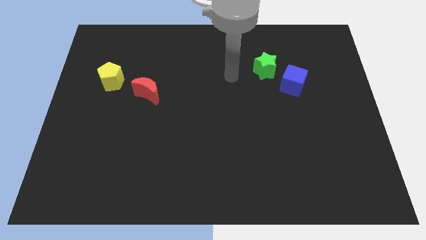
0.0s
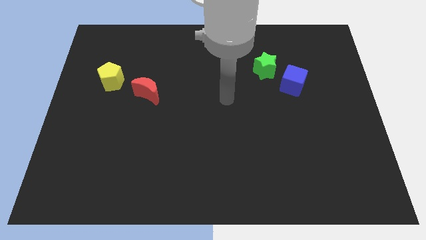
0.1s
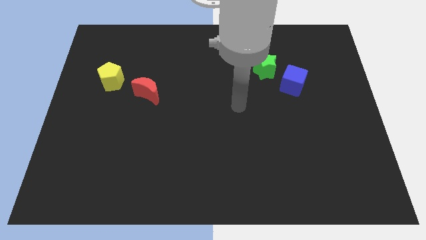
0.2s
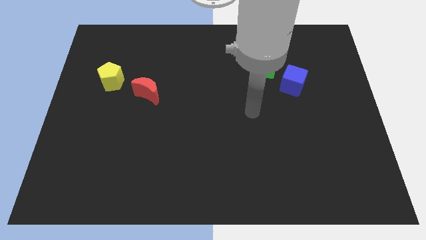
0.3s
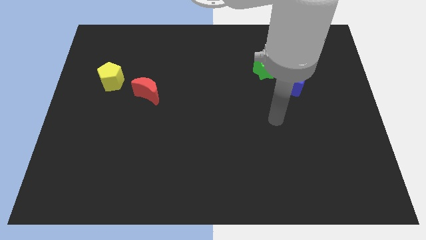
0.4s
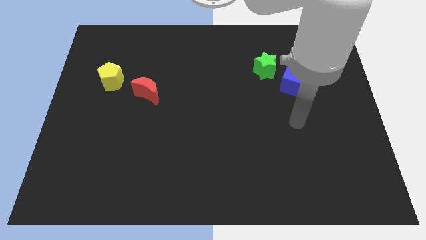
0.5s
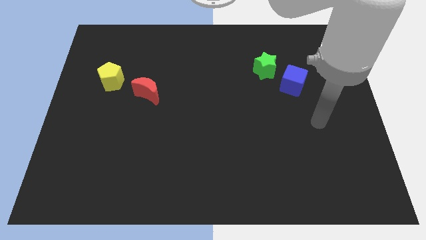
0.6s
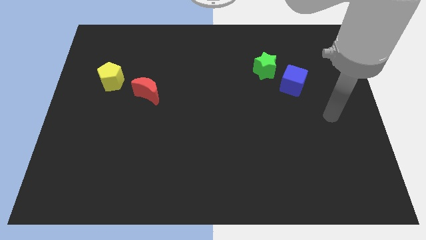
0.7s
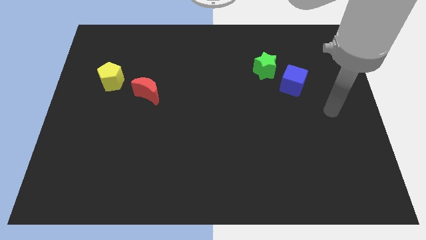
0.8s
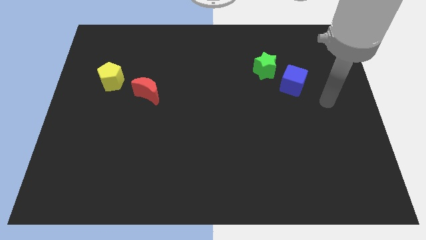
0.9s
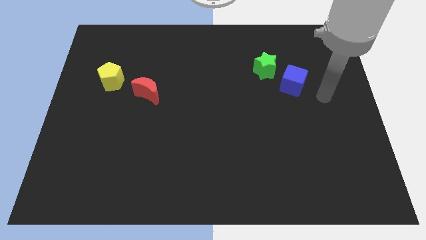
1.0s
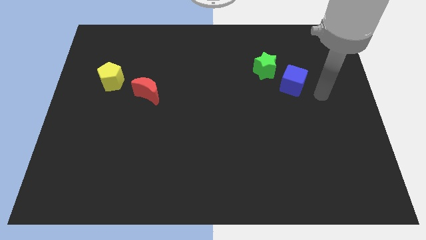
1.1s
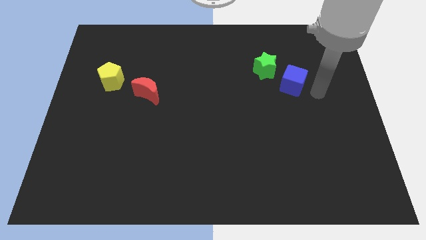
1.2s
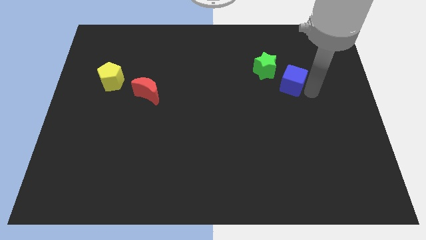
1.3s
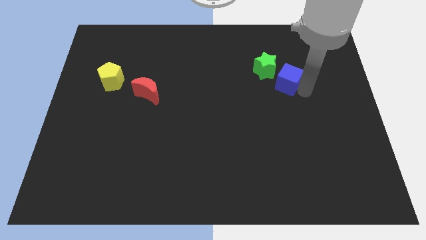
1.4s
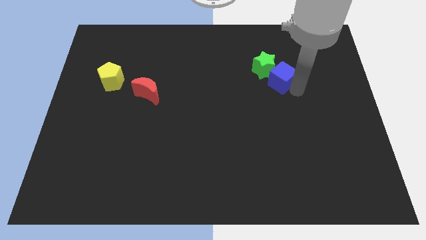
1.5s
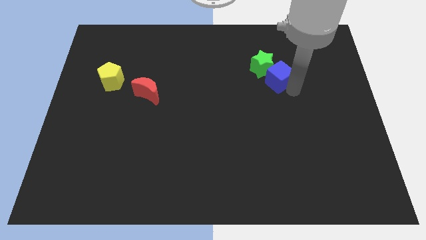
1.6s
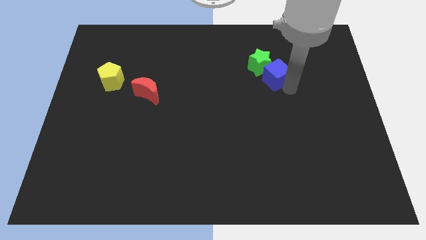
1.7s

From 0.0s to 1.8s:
move the blue block to the green block

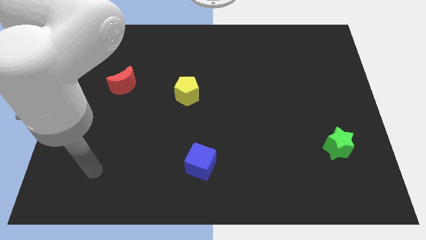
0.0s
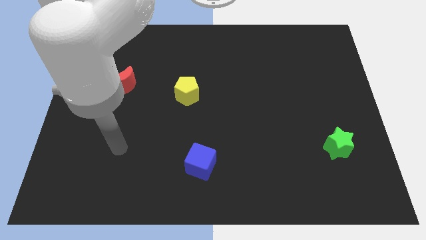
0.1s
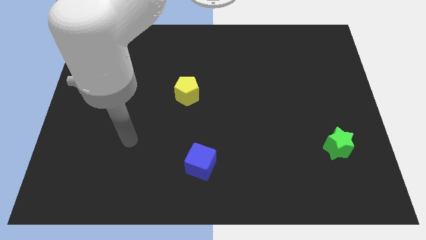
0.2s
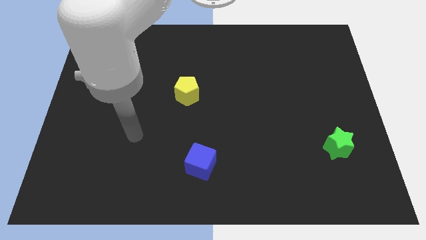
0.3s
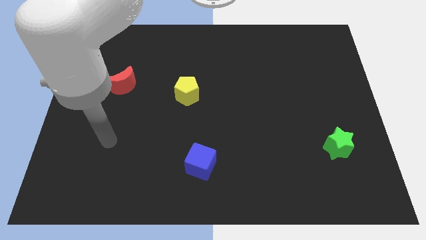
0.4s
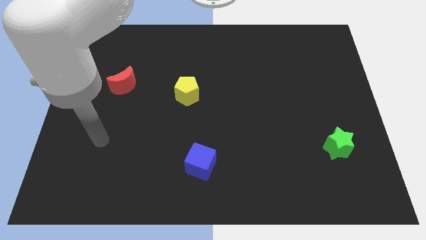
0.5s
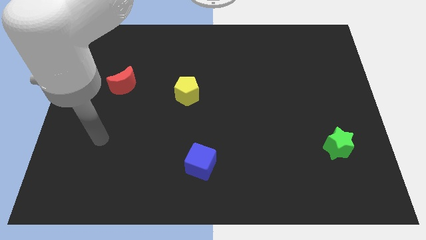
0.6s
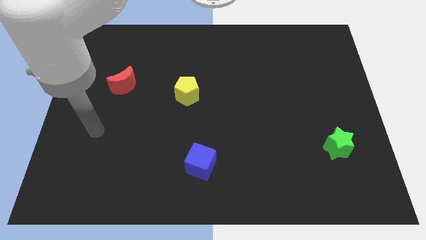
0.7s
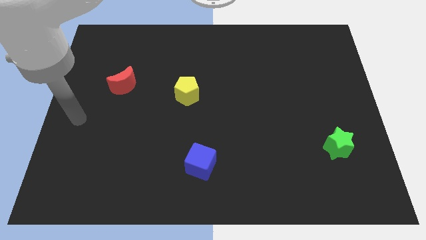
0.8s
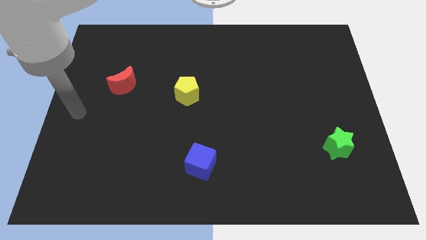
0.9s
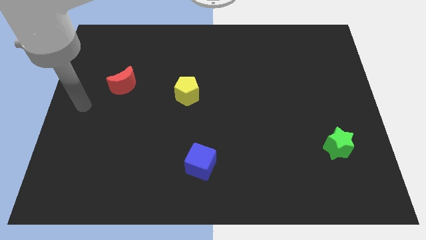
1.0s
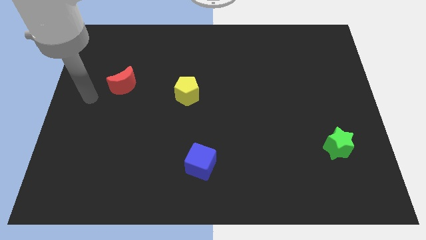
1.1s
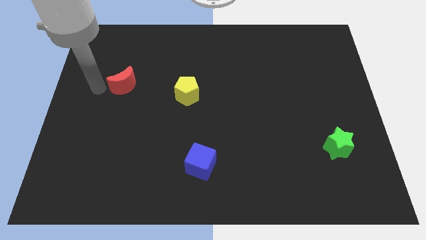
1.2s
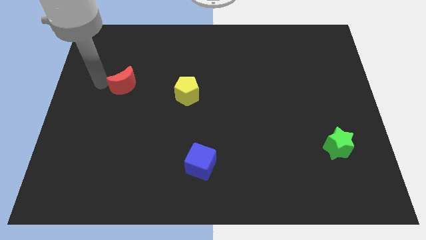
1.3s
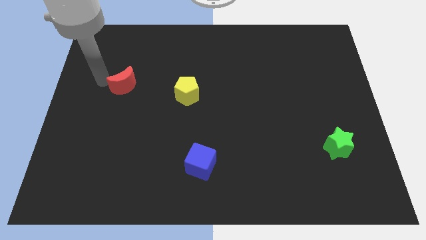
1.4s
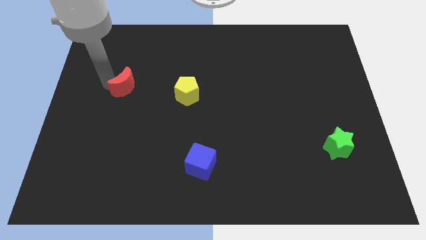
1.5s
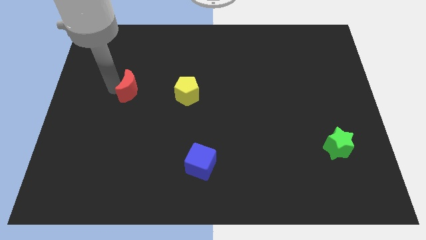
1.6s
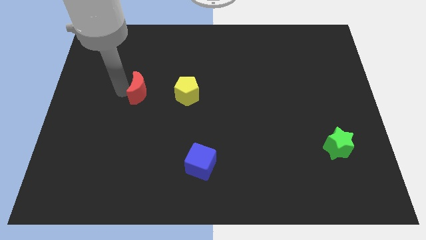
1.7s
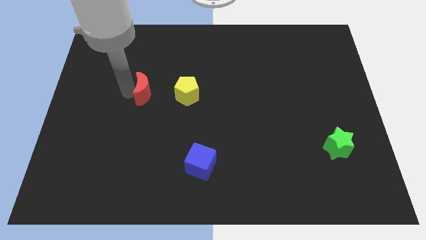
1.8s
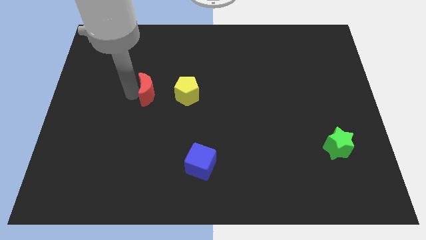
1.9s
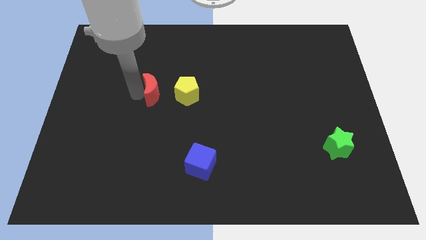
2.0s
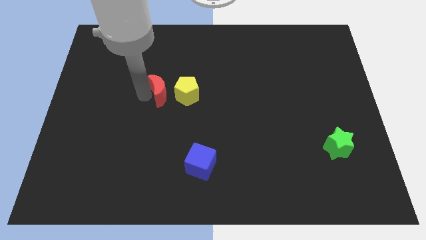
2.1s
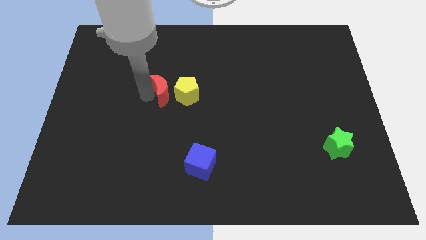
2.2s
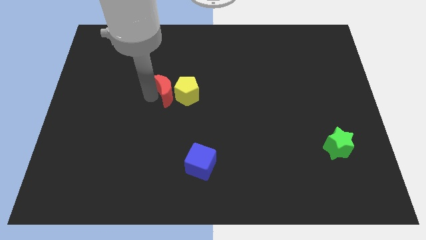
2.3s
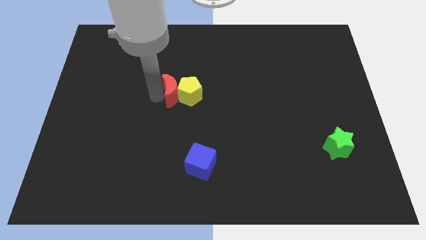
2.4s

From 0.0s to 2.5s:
push the red moon towards the yellow block

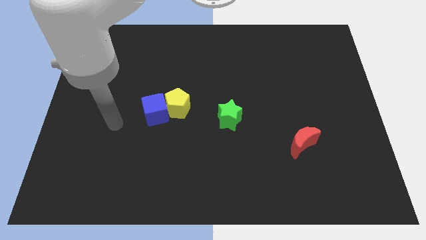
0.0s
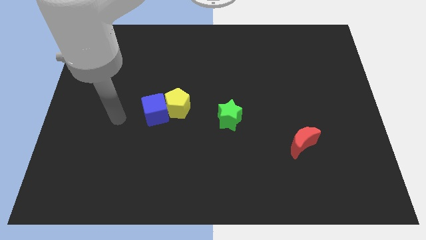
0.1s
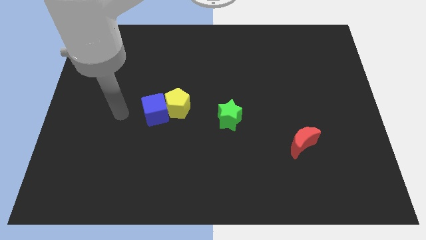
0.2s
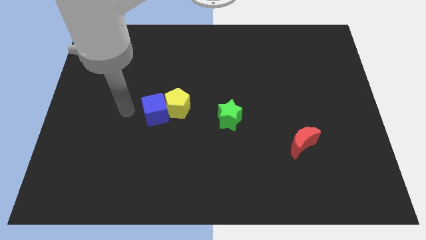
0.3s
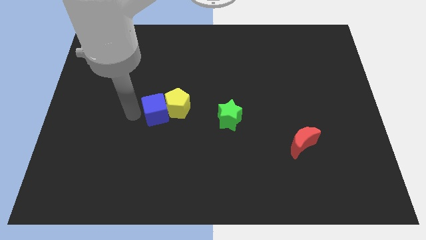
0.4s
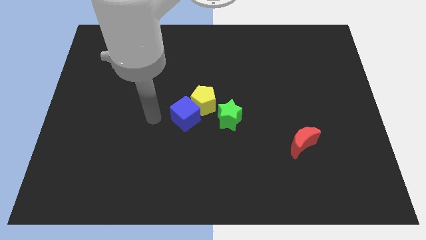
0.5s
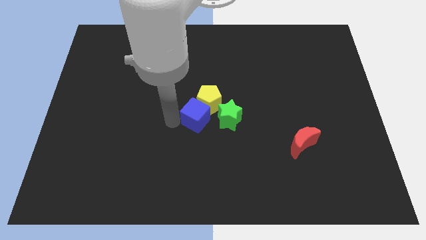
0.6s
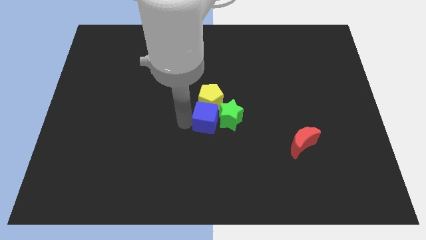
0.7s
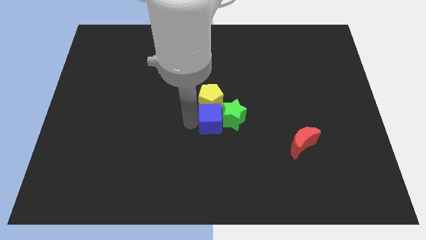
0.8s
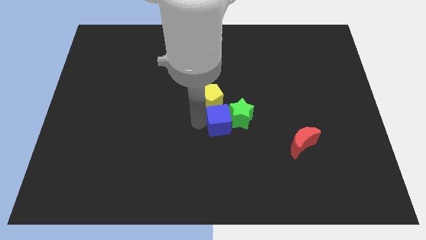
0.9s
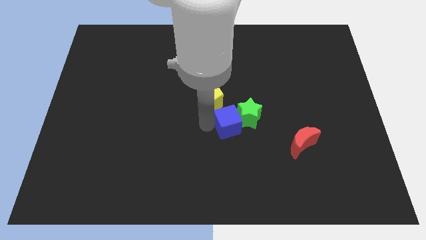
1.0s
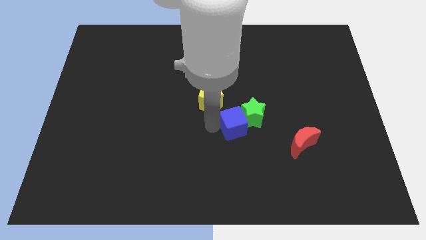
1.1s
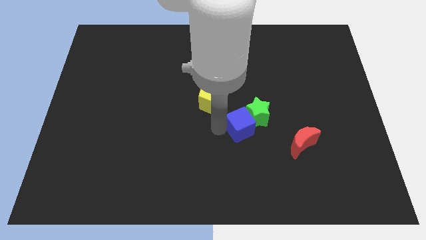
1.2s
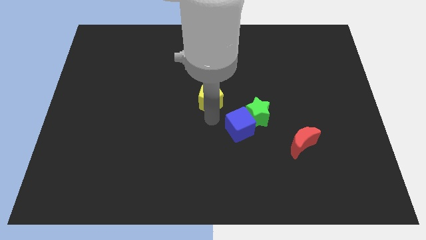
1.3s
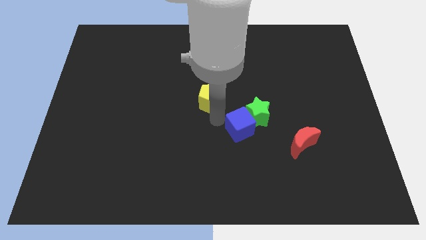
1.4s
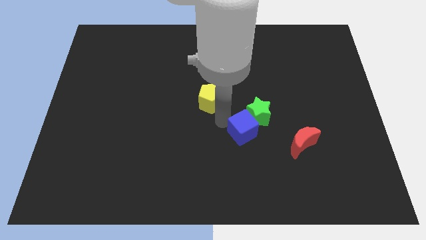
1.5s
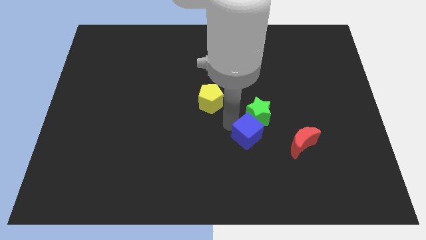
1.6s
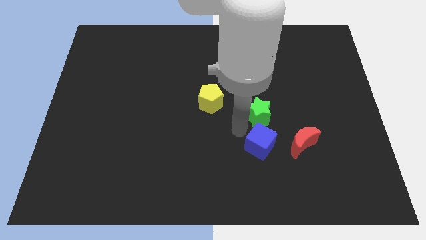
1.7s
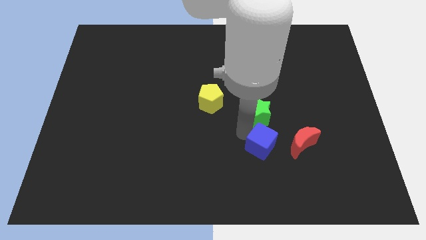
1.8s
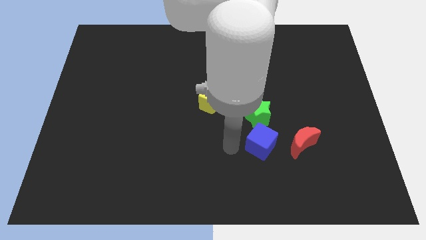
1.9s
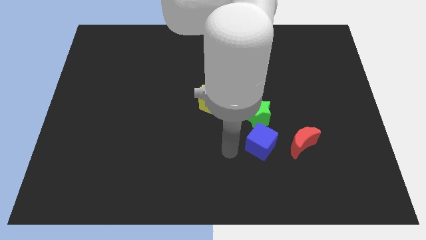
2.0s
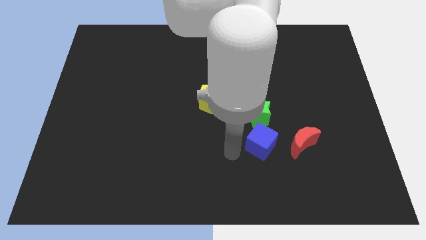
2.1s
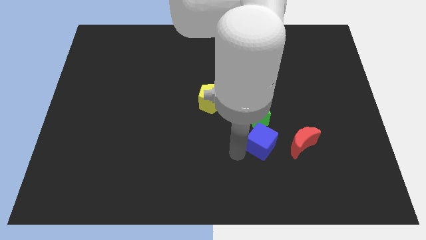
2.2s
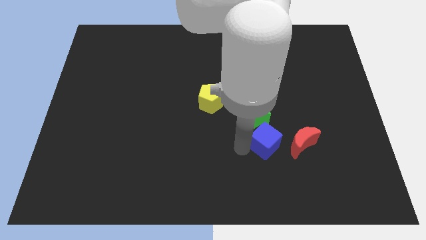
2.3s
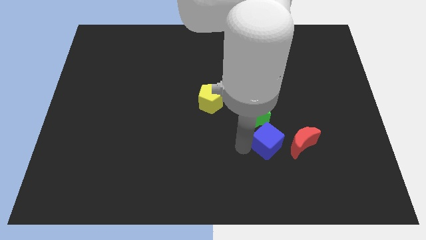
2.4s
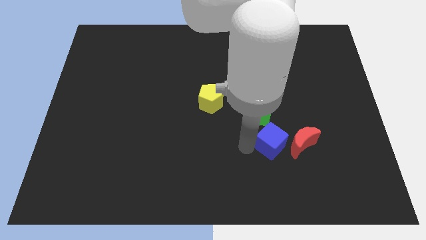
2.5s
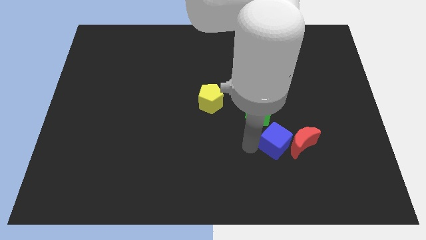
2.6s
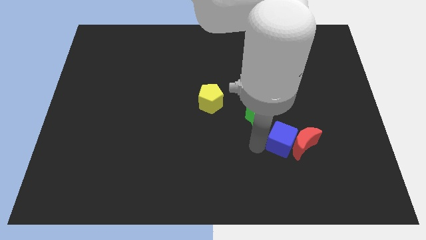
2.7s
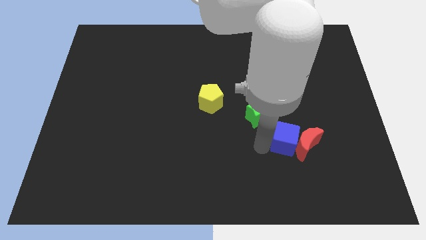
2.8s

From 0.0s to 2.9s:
slide the cube close to the moon

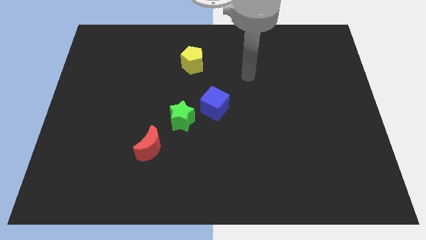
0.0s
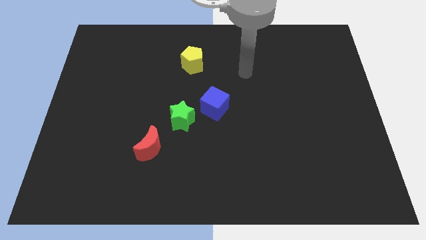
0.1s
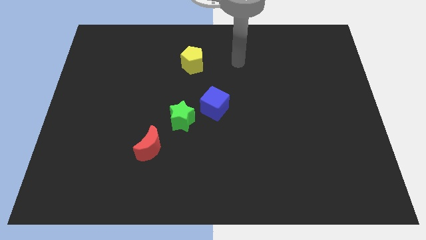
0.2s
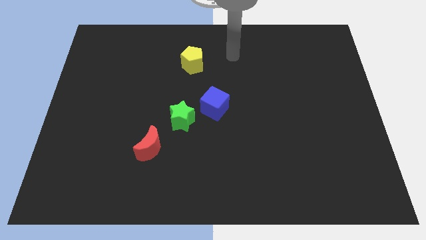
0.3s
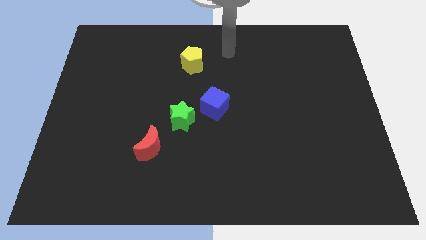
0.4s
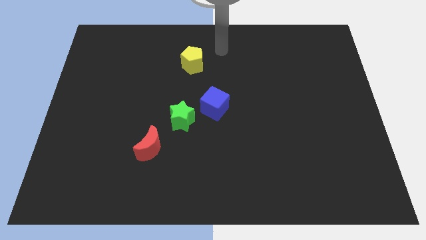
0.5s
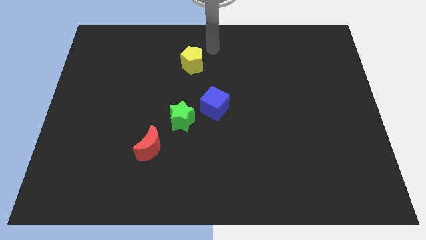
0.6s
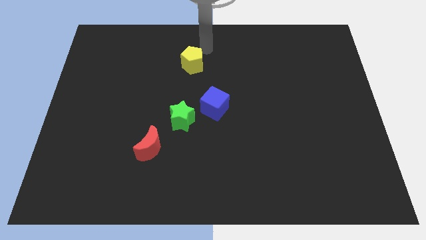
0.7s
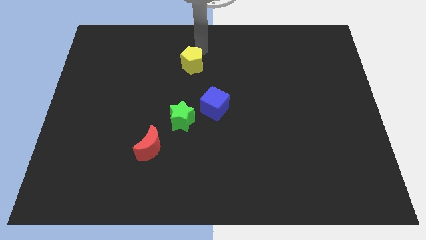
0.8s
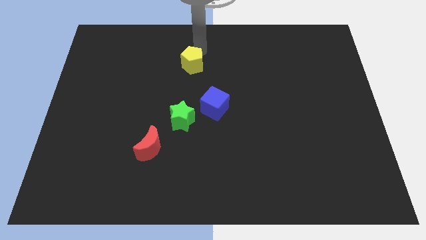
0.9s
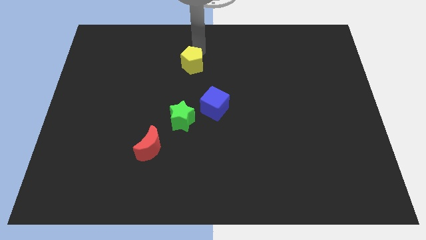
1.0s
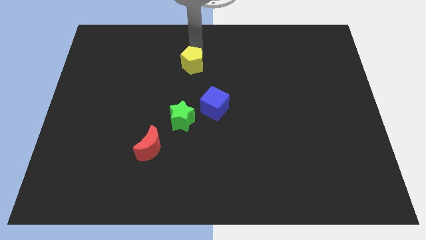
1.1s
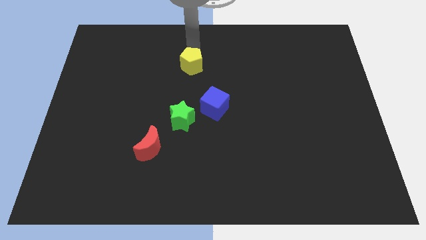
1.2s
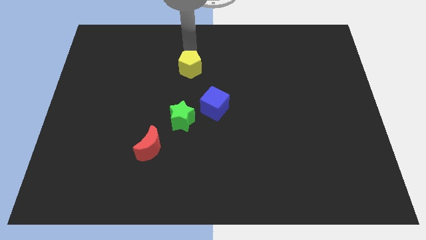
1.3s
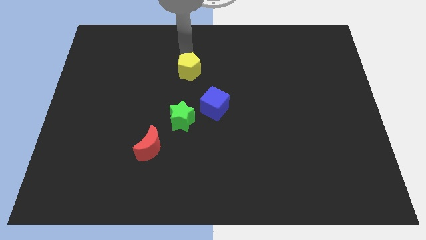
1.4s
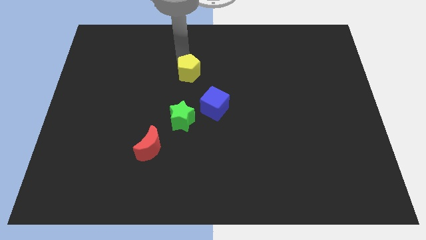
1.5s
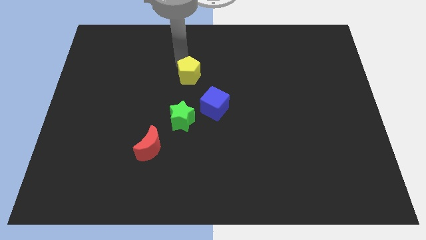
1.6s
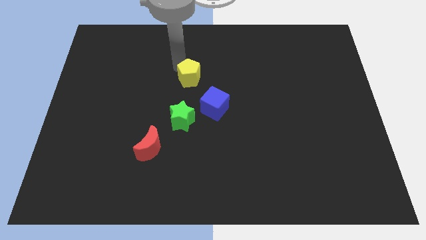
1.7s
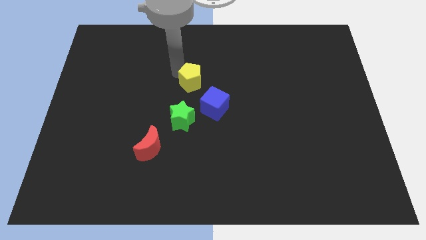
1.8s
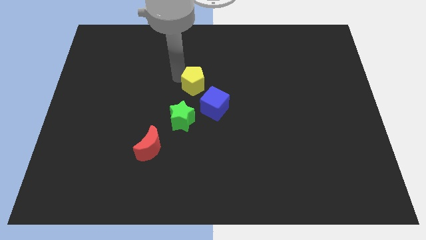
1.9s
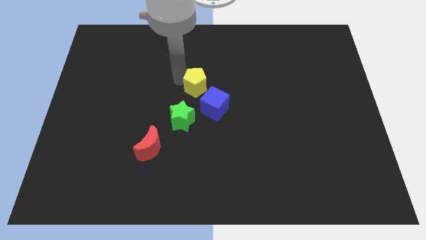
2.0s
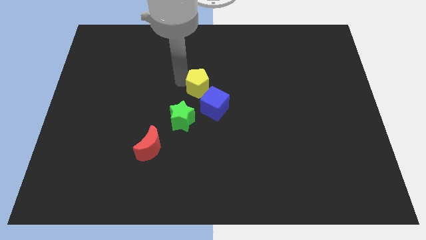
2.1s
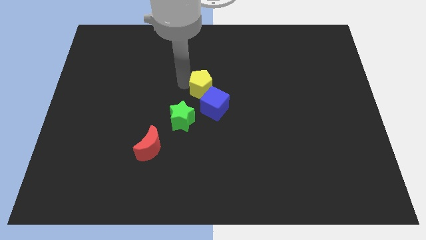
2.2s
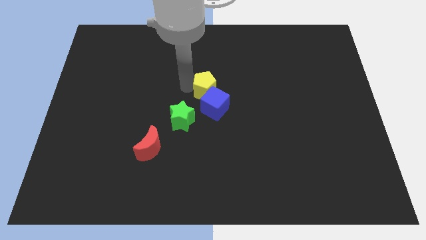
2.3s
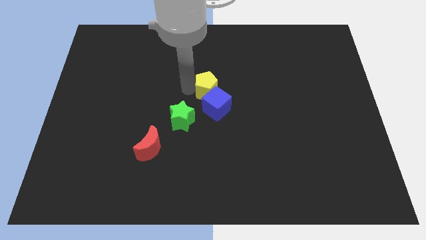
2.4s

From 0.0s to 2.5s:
move the yellow block close to the blue block
